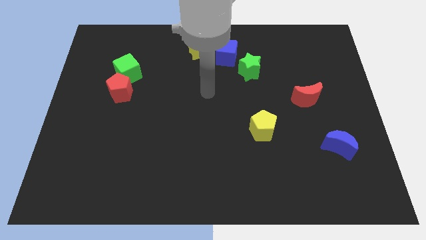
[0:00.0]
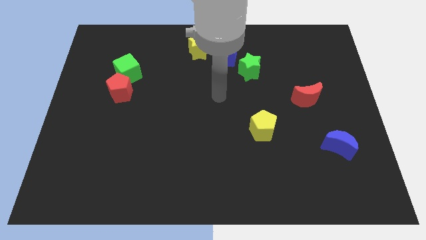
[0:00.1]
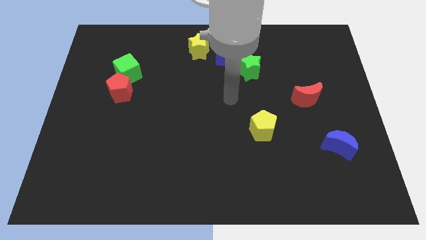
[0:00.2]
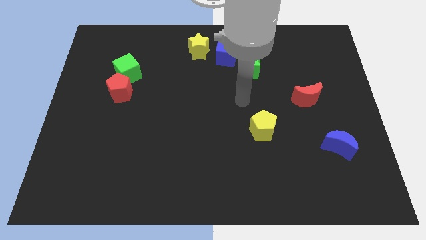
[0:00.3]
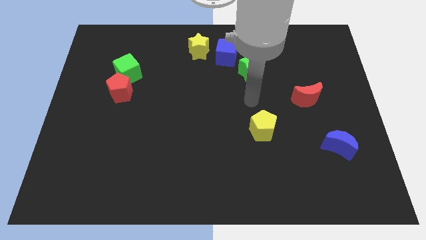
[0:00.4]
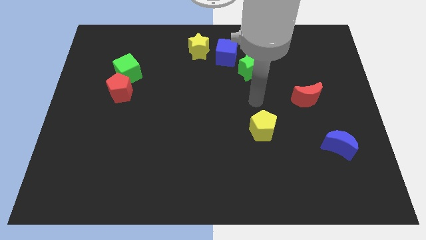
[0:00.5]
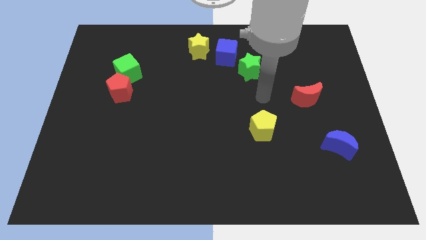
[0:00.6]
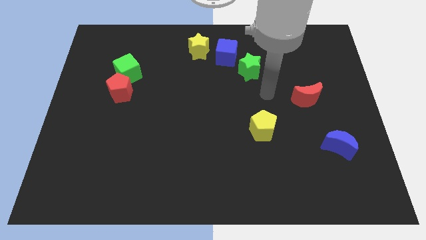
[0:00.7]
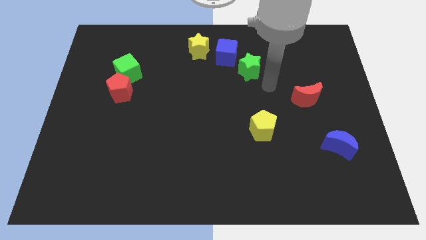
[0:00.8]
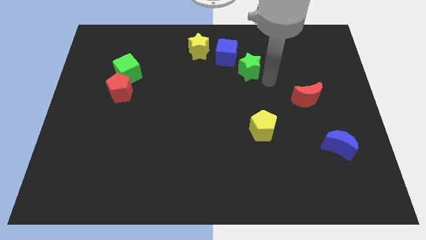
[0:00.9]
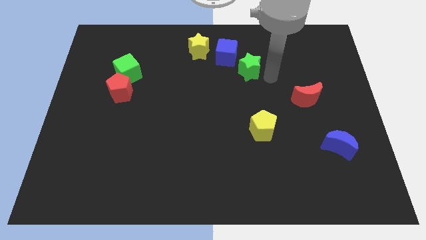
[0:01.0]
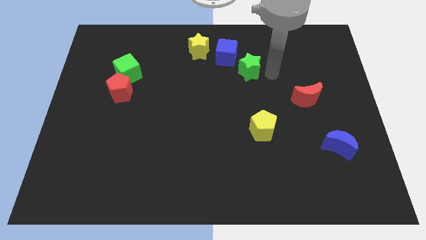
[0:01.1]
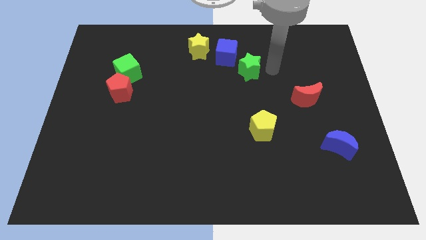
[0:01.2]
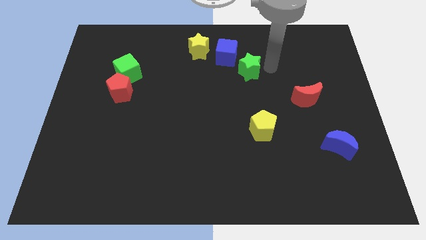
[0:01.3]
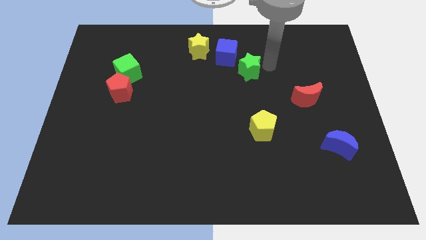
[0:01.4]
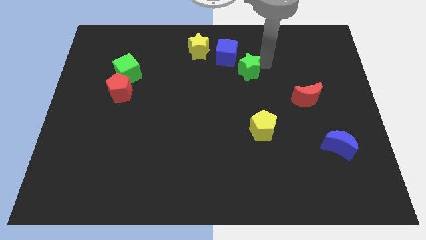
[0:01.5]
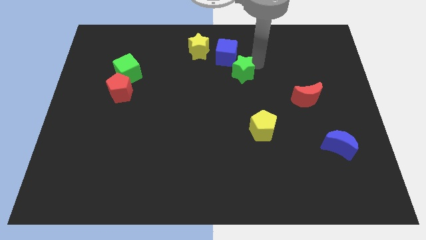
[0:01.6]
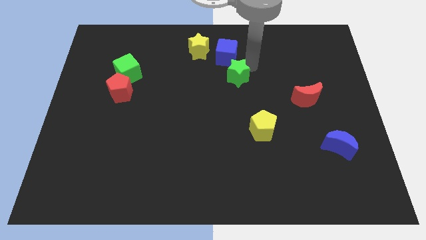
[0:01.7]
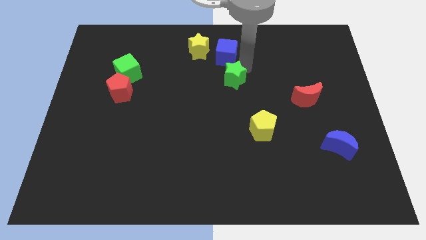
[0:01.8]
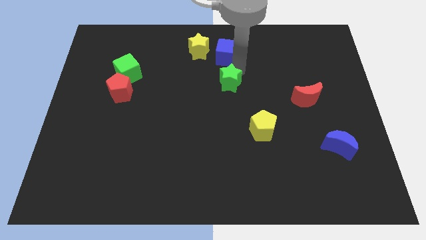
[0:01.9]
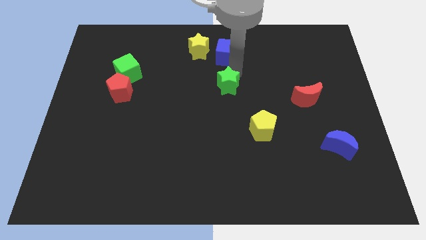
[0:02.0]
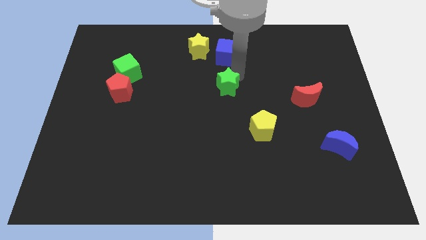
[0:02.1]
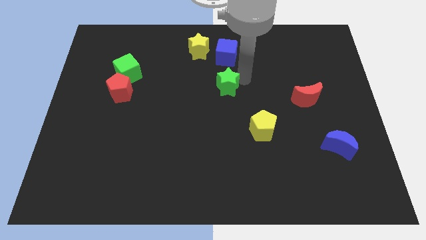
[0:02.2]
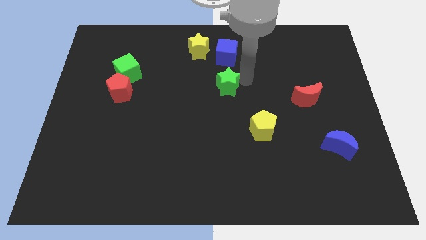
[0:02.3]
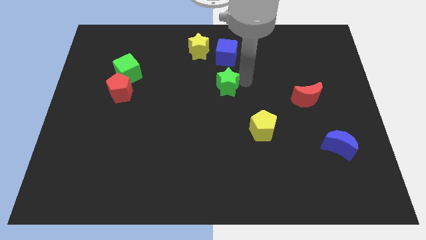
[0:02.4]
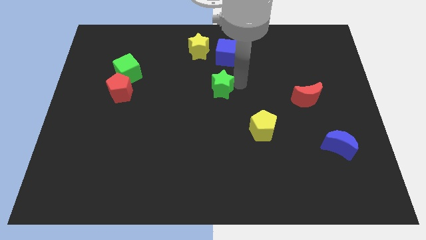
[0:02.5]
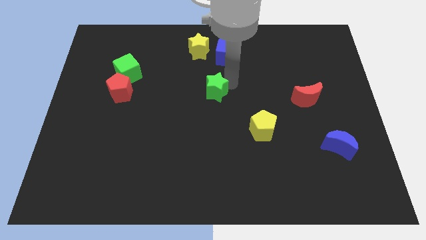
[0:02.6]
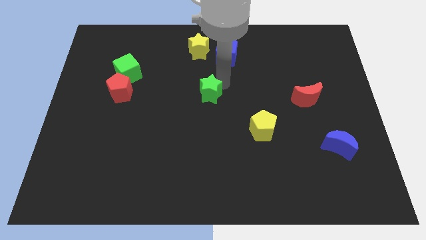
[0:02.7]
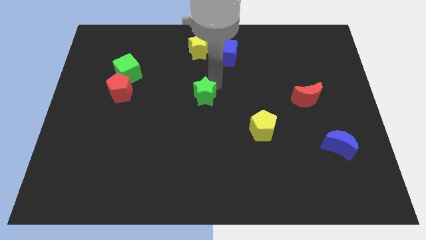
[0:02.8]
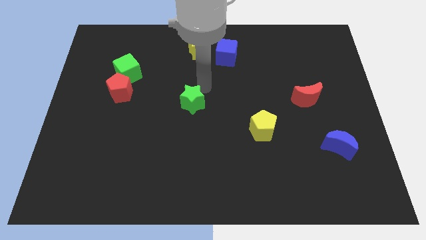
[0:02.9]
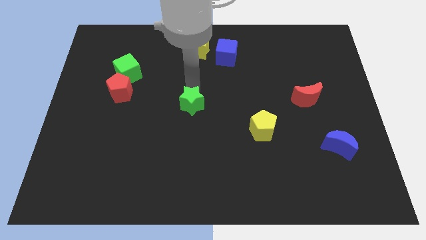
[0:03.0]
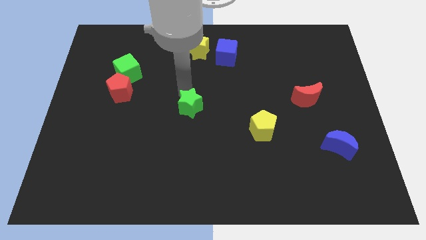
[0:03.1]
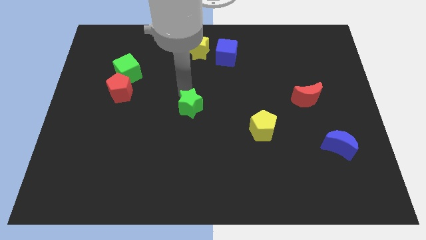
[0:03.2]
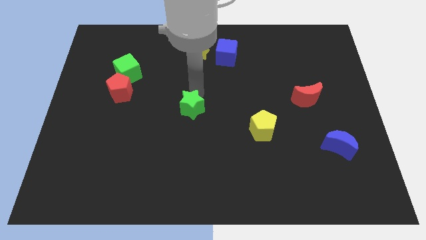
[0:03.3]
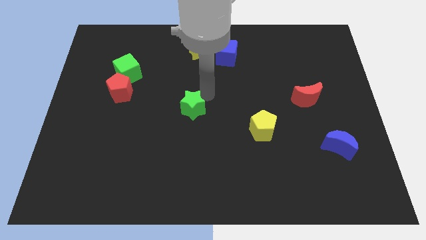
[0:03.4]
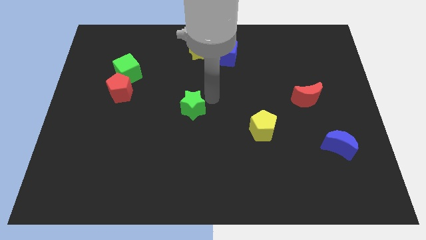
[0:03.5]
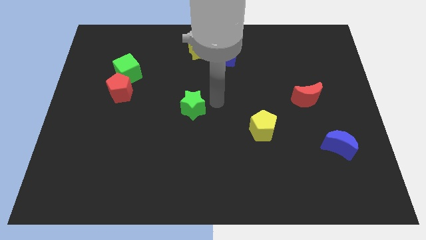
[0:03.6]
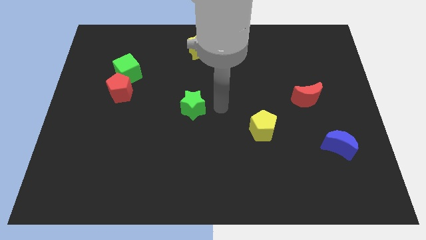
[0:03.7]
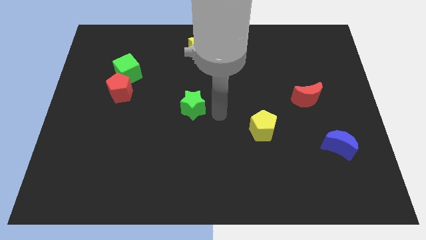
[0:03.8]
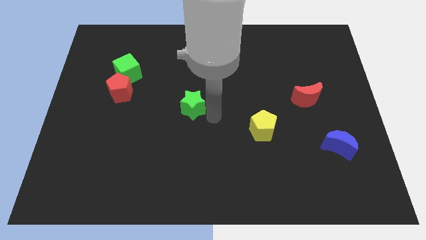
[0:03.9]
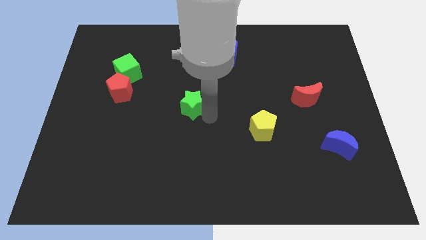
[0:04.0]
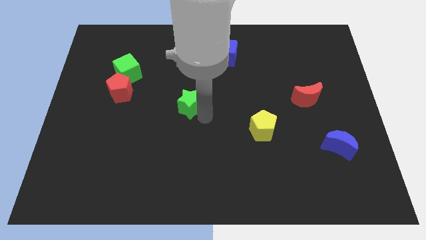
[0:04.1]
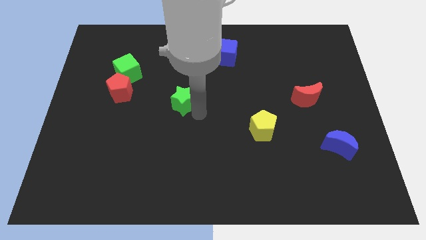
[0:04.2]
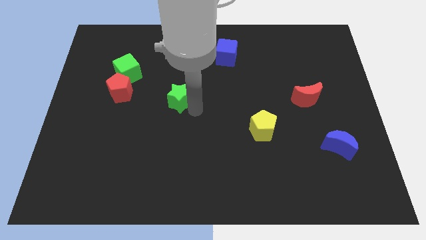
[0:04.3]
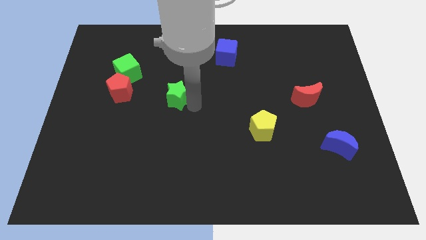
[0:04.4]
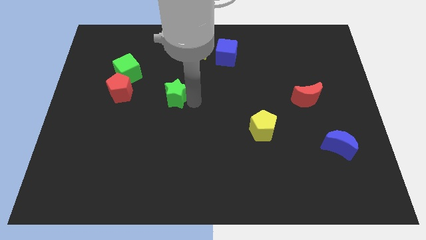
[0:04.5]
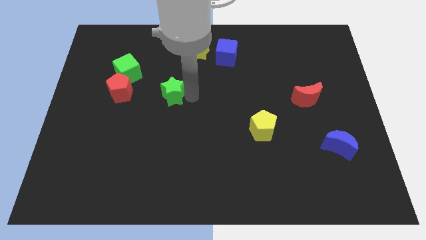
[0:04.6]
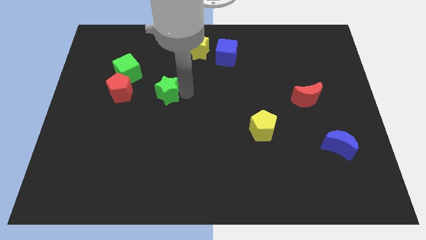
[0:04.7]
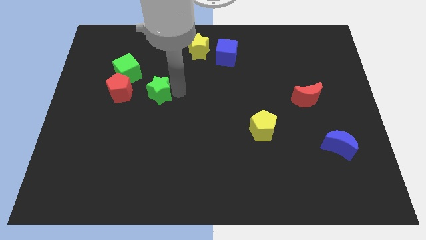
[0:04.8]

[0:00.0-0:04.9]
place the green star right to the red pentagon

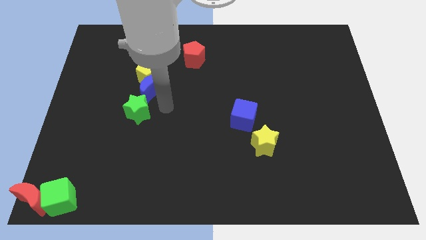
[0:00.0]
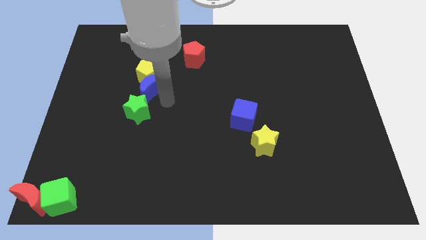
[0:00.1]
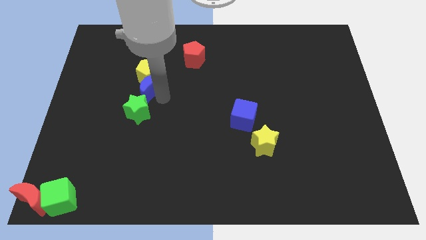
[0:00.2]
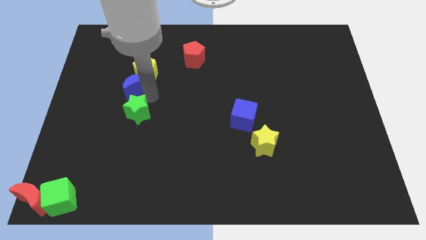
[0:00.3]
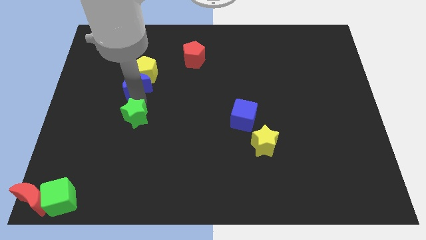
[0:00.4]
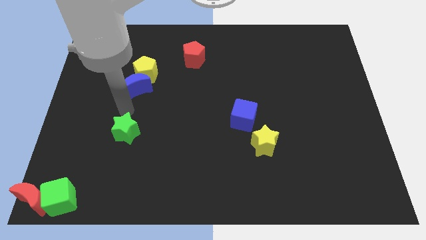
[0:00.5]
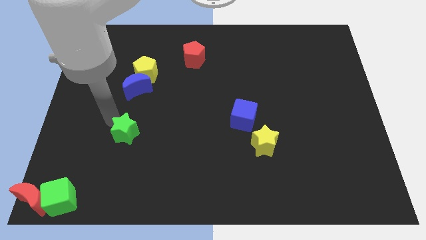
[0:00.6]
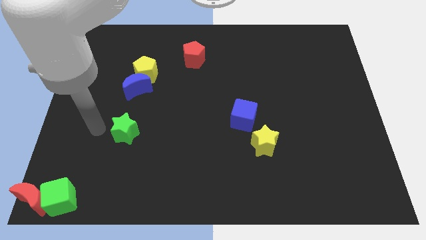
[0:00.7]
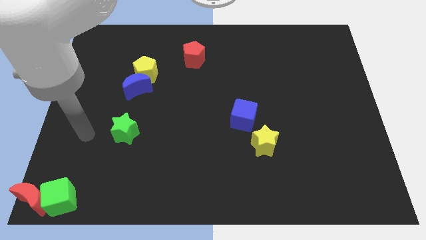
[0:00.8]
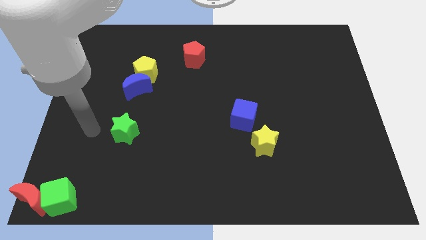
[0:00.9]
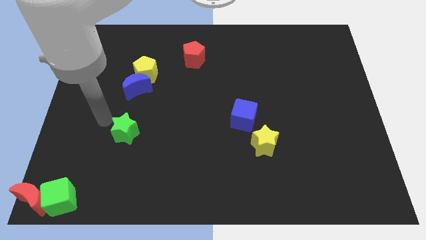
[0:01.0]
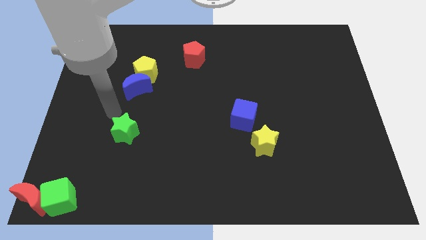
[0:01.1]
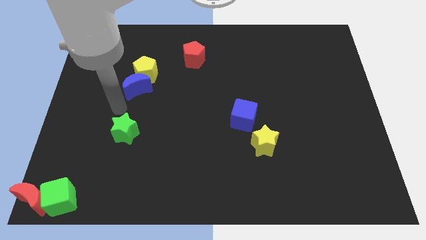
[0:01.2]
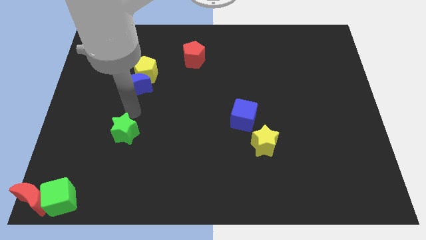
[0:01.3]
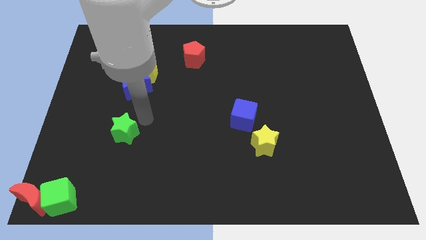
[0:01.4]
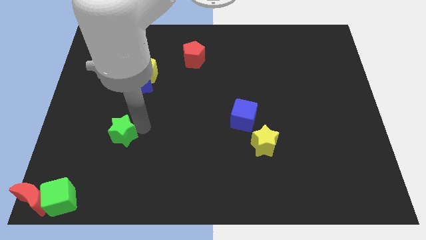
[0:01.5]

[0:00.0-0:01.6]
place the green star left to the yellow star

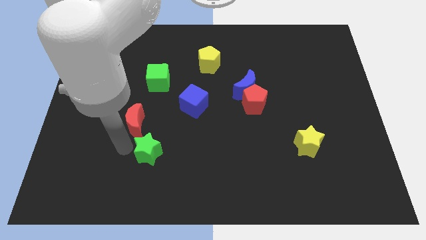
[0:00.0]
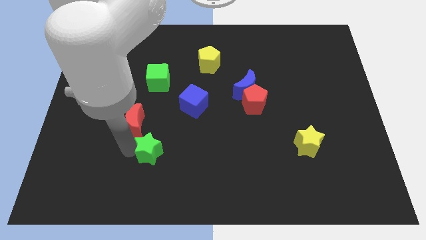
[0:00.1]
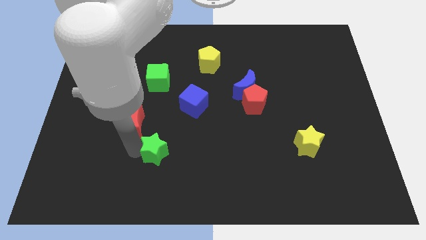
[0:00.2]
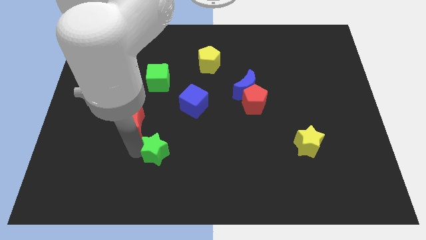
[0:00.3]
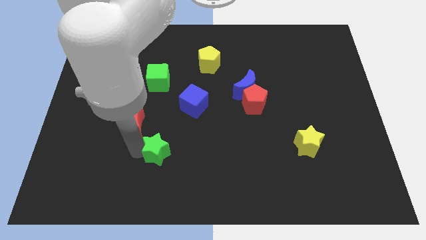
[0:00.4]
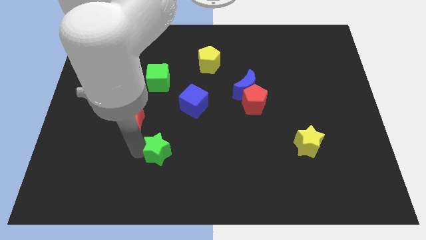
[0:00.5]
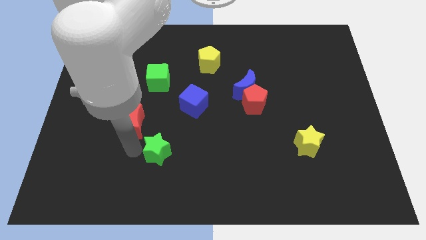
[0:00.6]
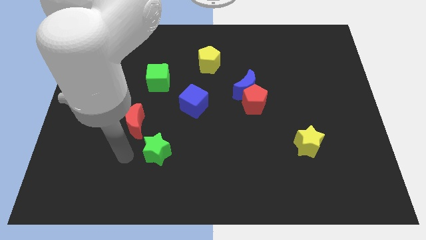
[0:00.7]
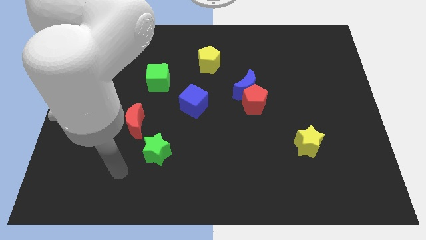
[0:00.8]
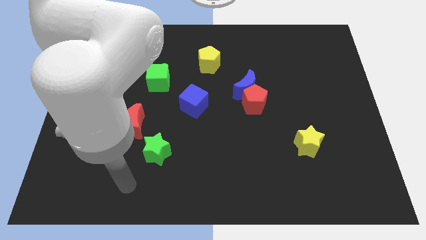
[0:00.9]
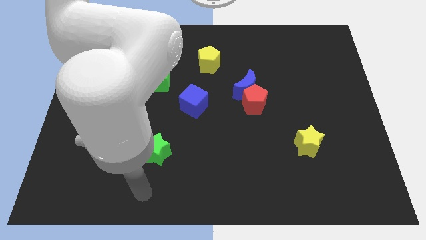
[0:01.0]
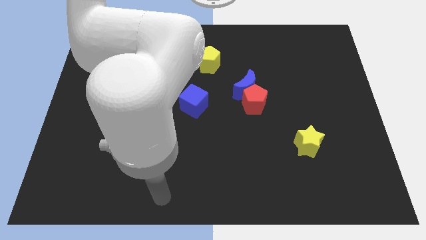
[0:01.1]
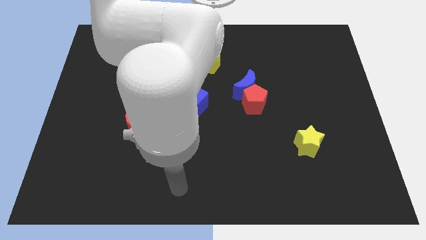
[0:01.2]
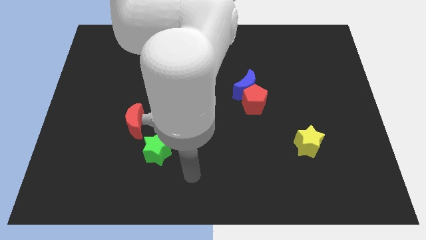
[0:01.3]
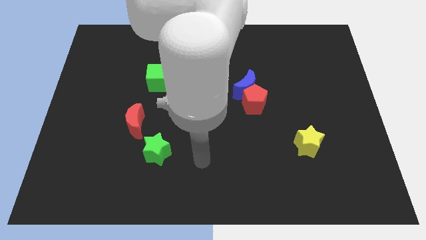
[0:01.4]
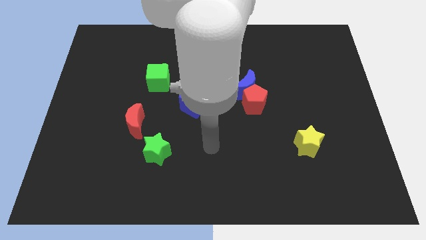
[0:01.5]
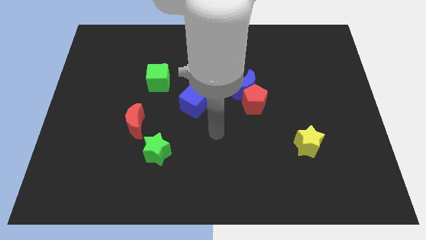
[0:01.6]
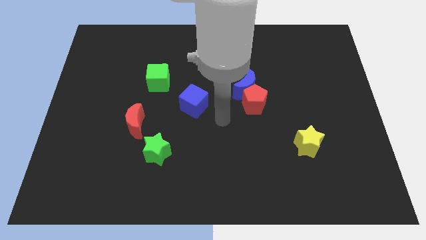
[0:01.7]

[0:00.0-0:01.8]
slide the green star diagonally on the bottom left side of the blue cube

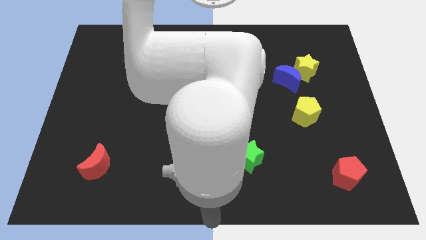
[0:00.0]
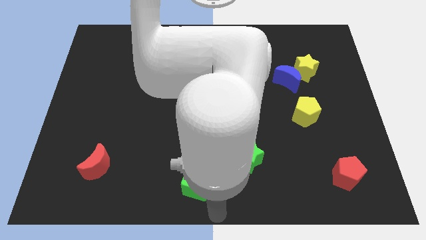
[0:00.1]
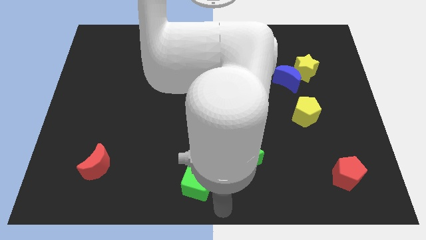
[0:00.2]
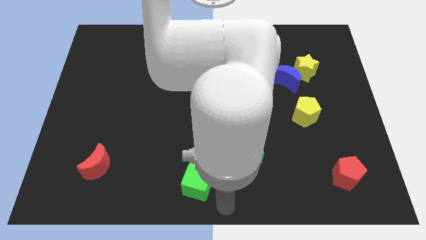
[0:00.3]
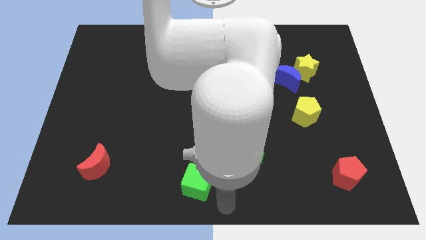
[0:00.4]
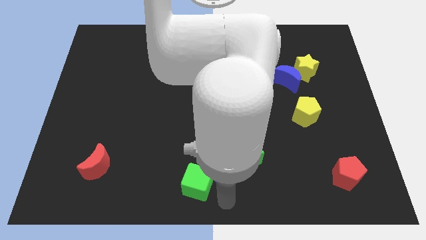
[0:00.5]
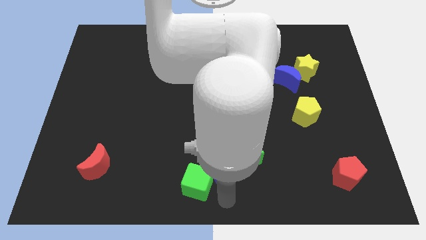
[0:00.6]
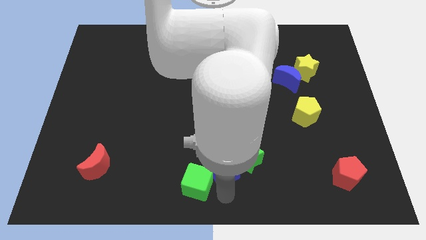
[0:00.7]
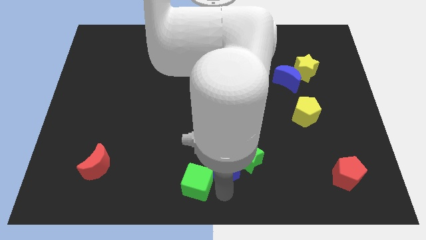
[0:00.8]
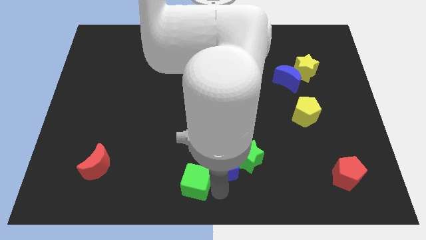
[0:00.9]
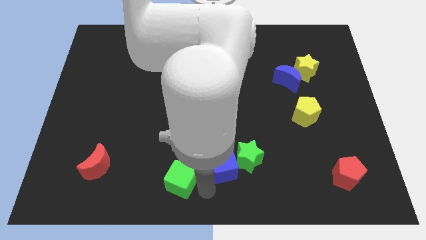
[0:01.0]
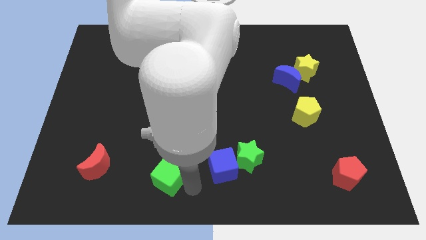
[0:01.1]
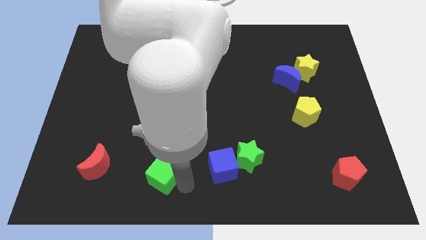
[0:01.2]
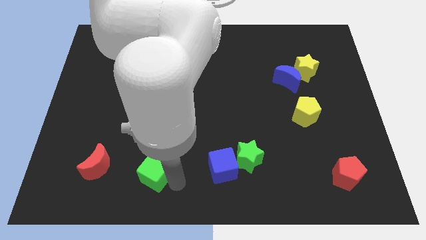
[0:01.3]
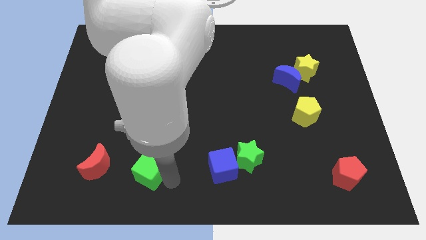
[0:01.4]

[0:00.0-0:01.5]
push the green cube slightly to the bottom left
